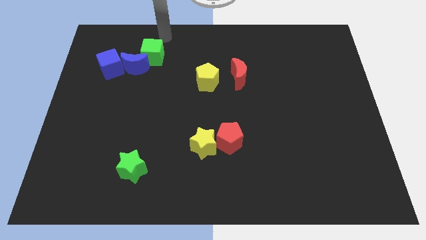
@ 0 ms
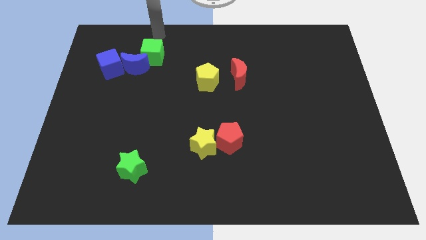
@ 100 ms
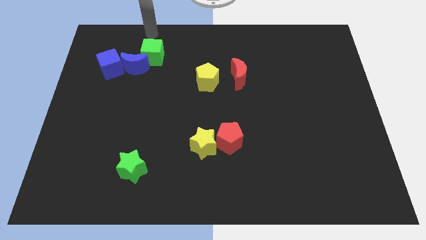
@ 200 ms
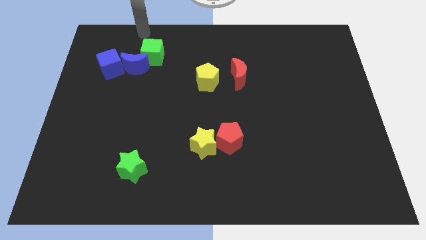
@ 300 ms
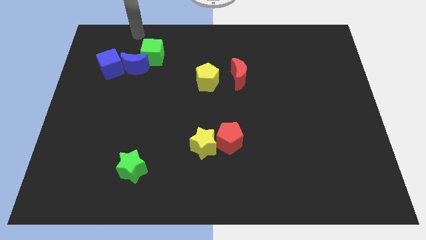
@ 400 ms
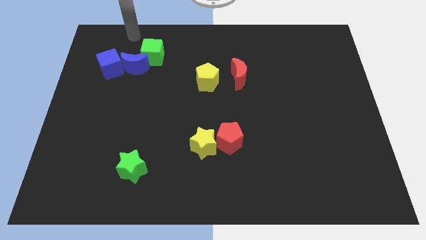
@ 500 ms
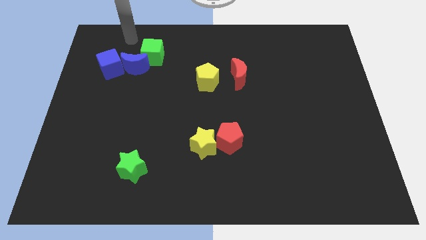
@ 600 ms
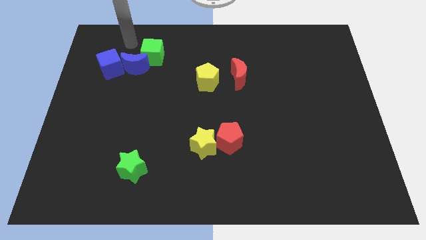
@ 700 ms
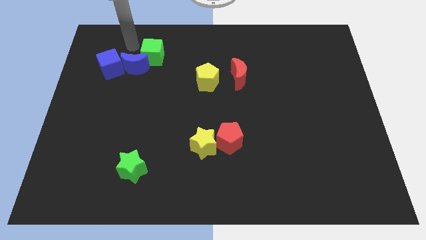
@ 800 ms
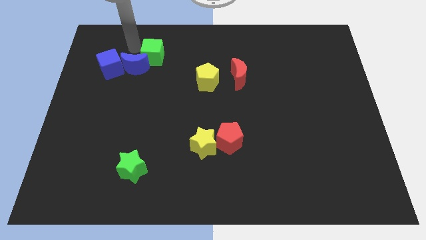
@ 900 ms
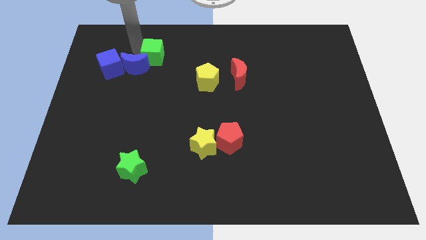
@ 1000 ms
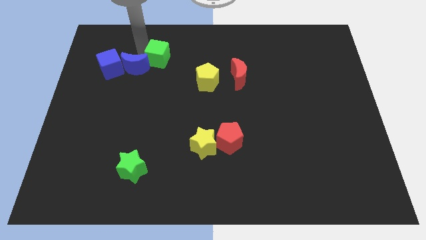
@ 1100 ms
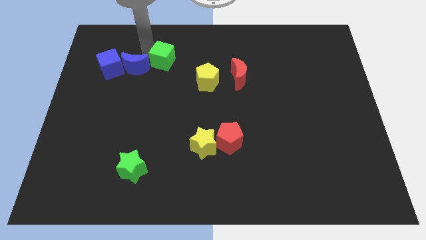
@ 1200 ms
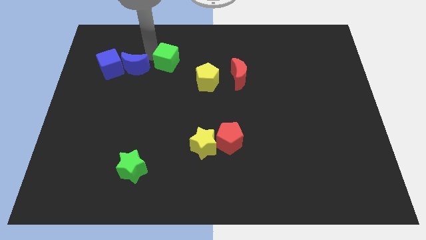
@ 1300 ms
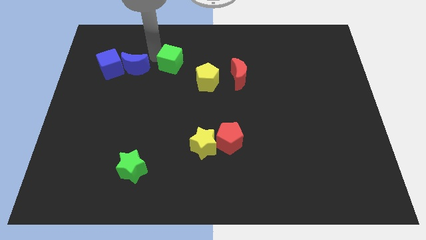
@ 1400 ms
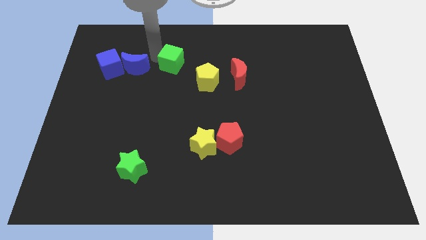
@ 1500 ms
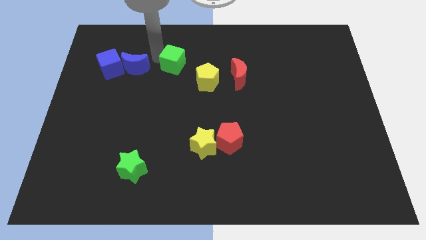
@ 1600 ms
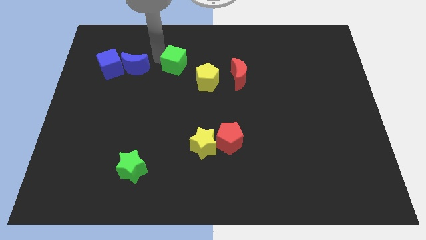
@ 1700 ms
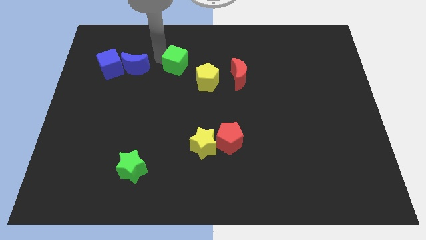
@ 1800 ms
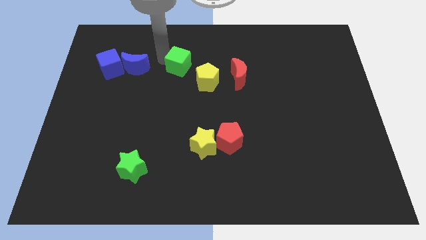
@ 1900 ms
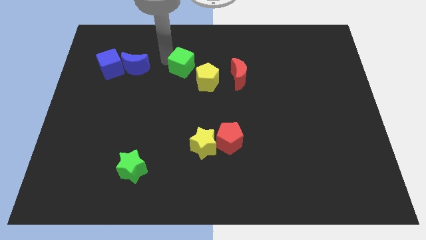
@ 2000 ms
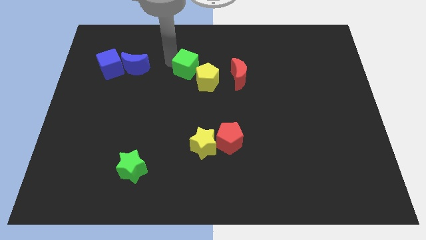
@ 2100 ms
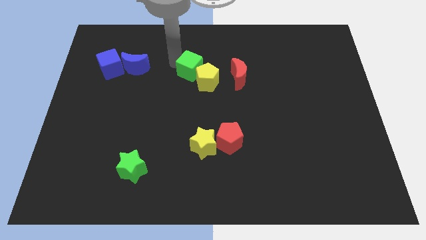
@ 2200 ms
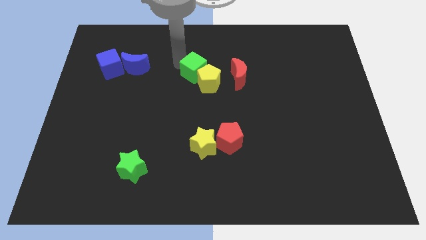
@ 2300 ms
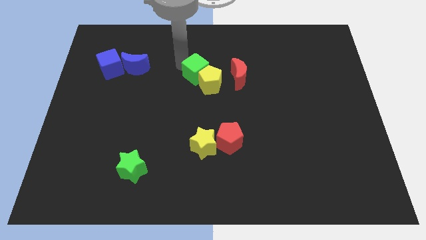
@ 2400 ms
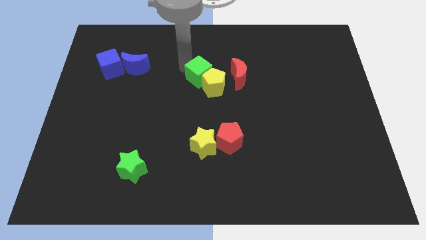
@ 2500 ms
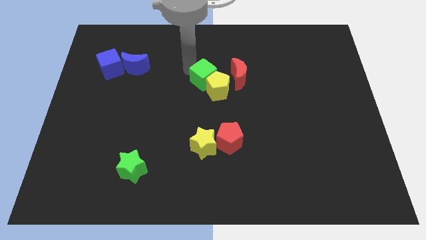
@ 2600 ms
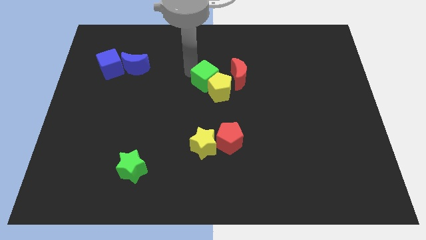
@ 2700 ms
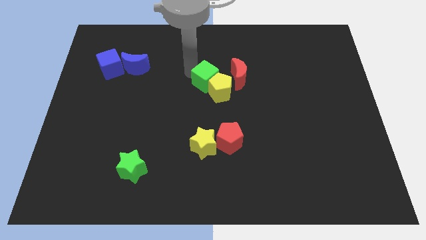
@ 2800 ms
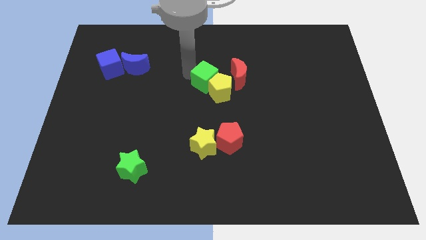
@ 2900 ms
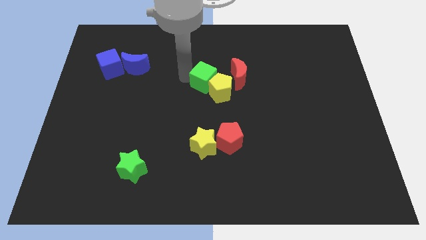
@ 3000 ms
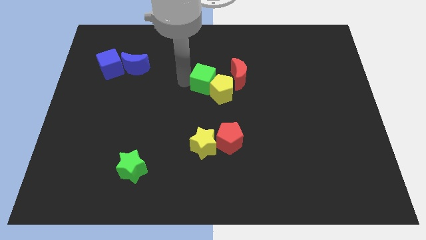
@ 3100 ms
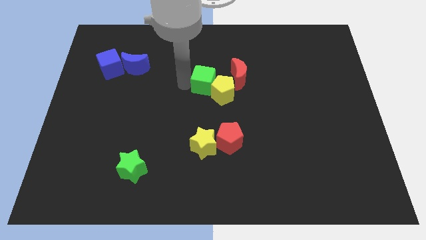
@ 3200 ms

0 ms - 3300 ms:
move the green cube to the top left side of the yellow pentagon

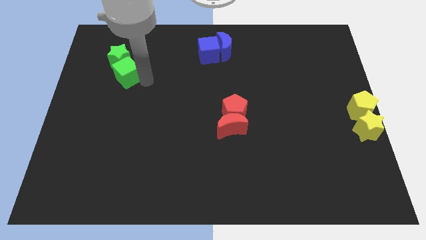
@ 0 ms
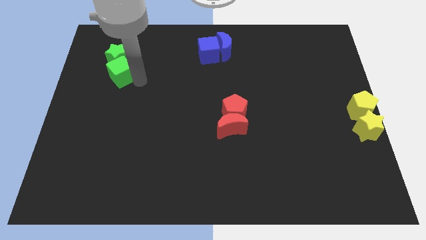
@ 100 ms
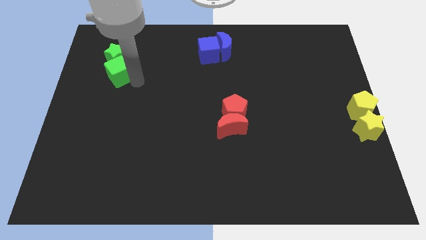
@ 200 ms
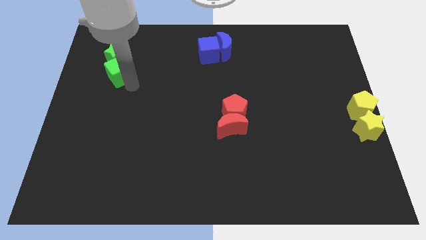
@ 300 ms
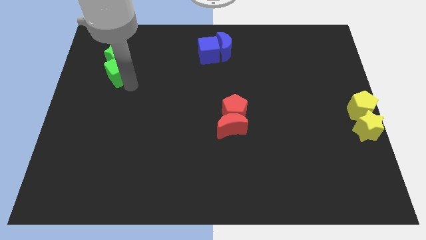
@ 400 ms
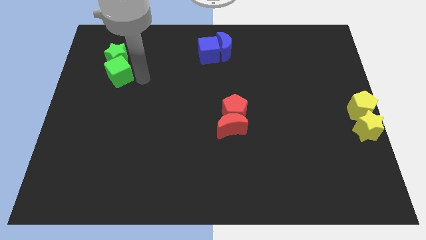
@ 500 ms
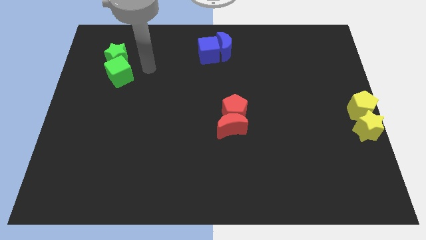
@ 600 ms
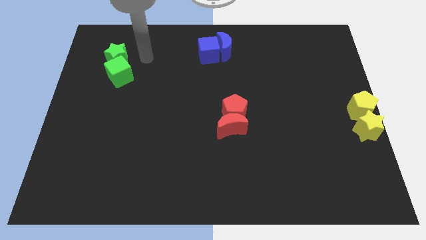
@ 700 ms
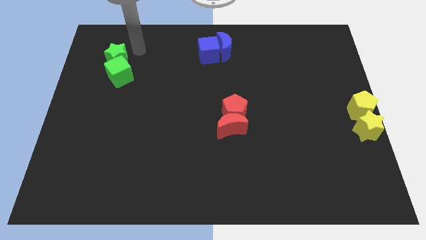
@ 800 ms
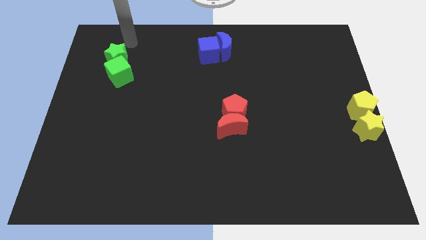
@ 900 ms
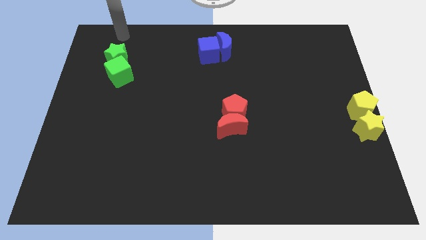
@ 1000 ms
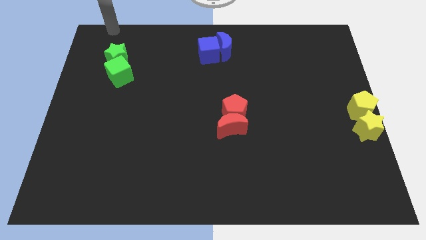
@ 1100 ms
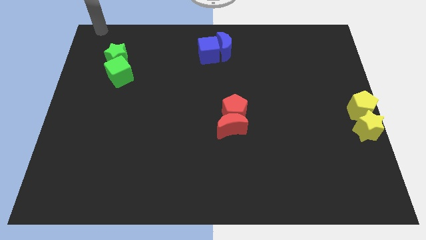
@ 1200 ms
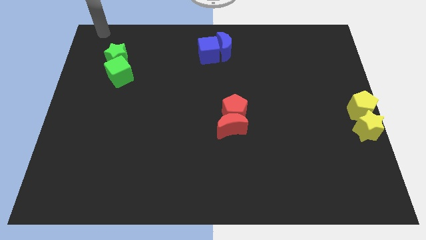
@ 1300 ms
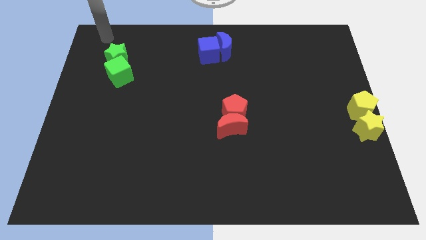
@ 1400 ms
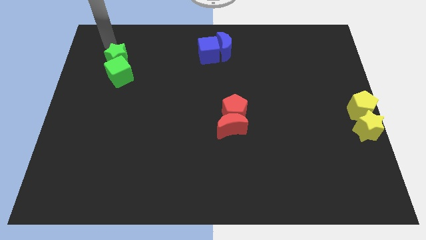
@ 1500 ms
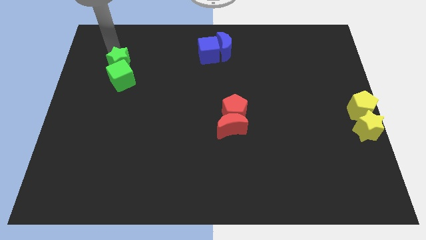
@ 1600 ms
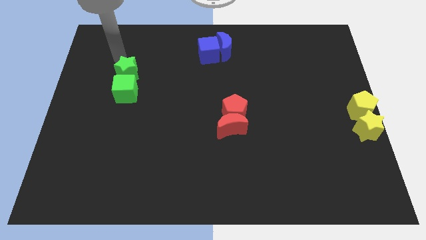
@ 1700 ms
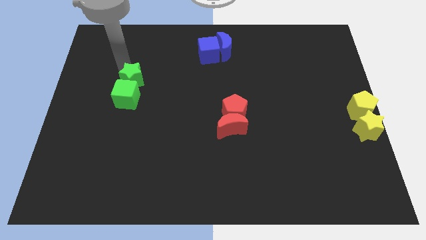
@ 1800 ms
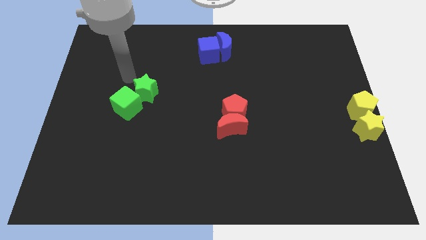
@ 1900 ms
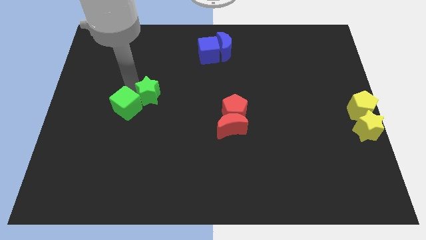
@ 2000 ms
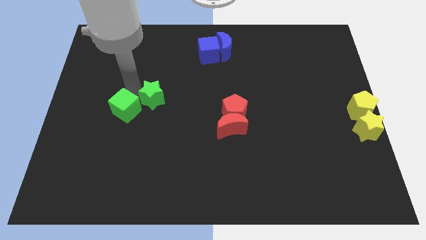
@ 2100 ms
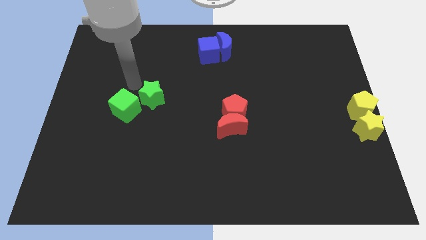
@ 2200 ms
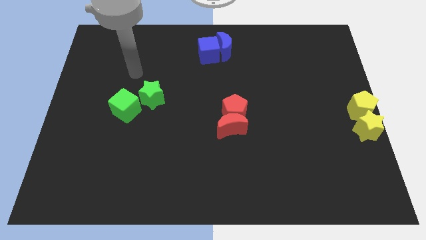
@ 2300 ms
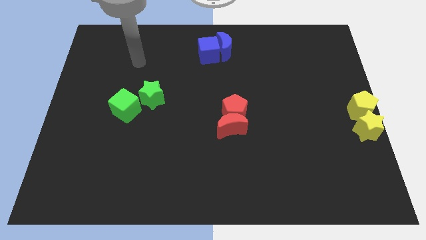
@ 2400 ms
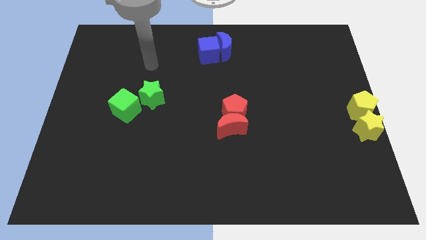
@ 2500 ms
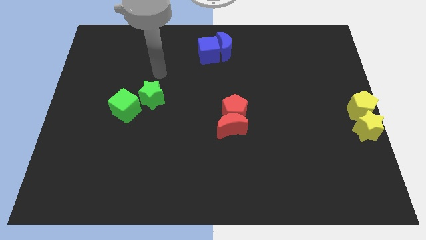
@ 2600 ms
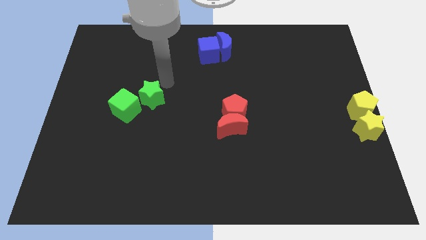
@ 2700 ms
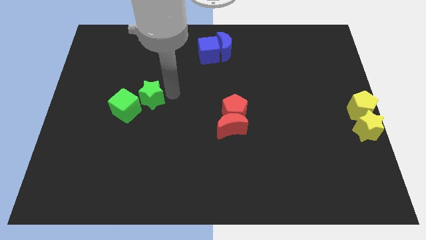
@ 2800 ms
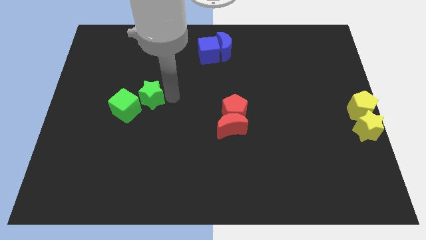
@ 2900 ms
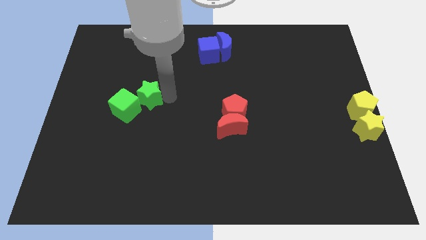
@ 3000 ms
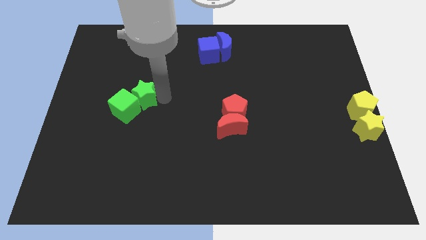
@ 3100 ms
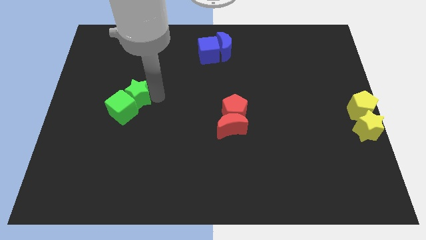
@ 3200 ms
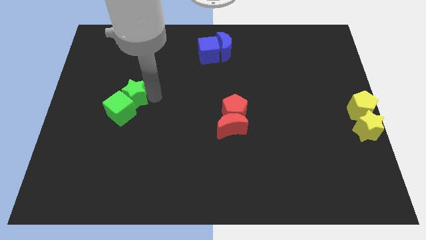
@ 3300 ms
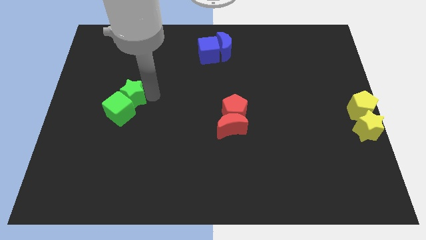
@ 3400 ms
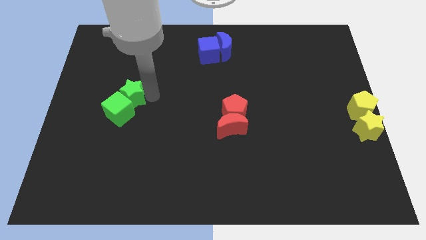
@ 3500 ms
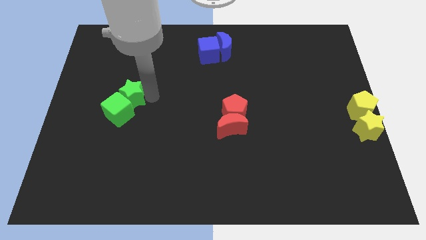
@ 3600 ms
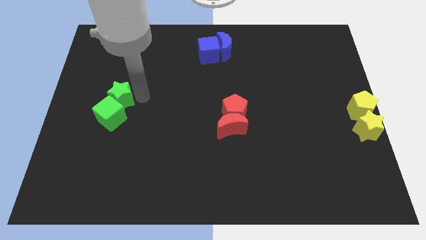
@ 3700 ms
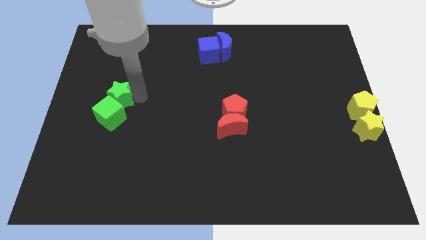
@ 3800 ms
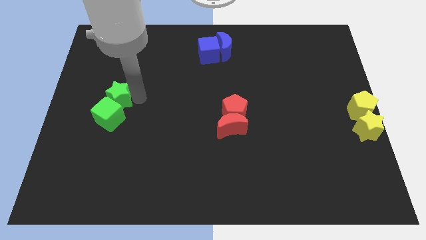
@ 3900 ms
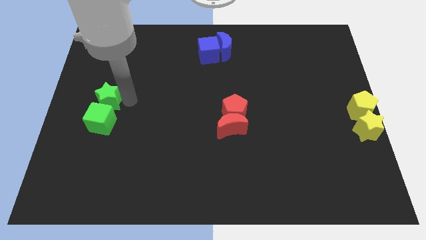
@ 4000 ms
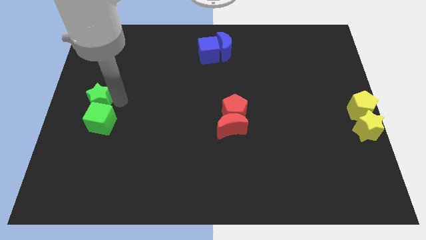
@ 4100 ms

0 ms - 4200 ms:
place the green blocks to the left of the red blocks

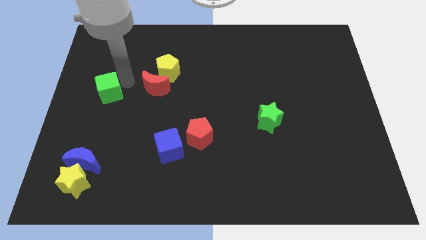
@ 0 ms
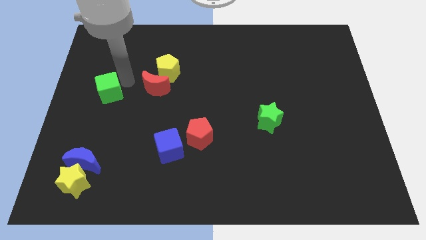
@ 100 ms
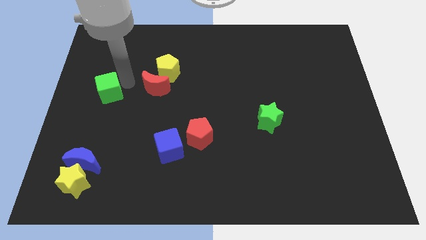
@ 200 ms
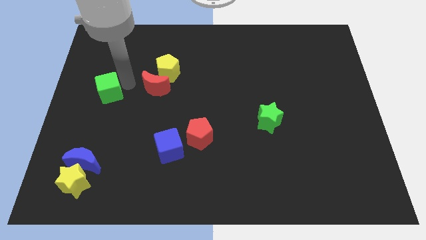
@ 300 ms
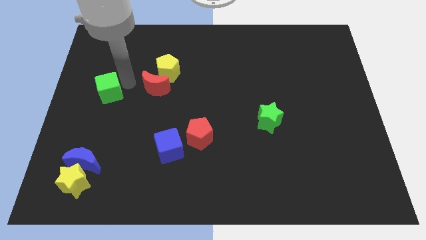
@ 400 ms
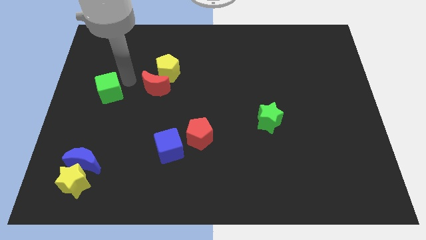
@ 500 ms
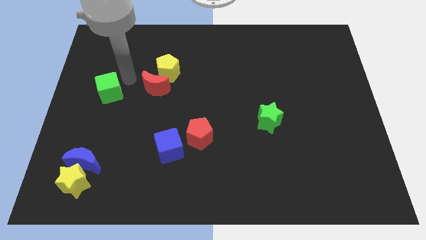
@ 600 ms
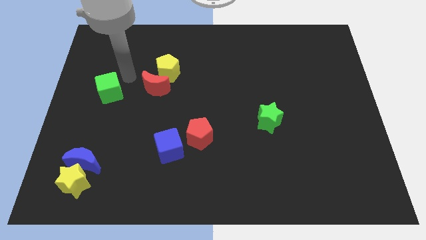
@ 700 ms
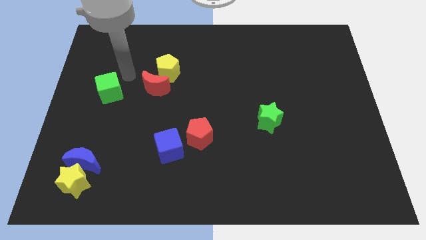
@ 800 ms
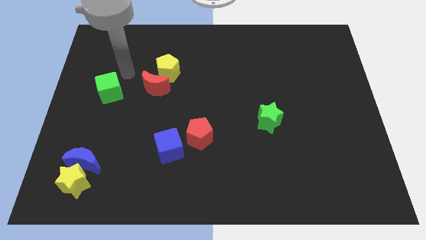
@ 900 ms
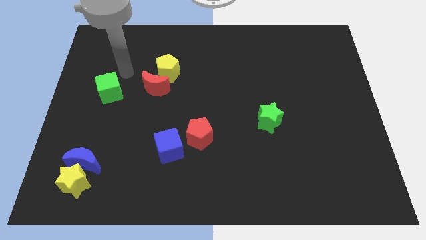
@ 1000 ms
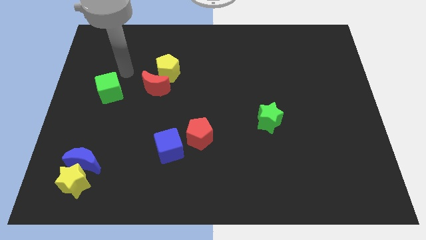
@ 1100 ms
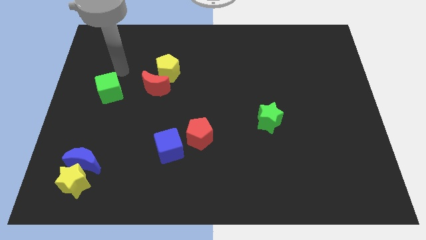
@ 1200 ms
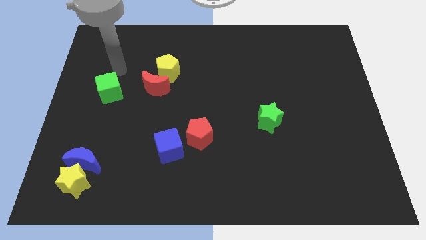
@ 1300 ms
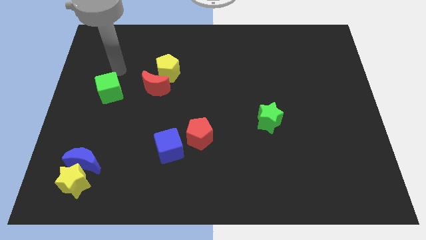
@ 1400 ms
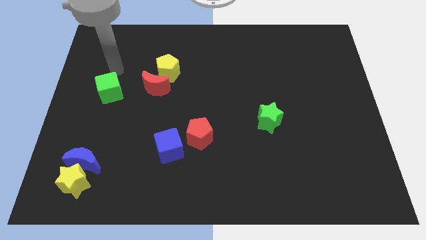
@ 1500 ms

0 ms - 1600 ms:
place the arm towards the top of green cube
